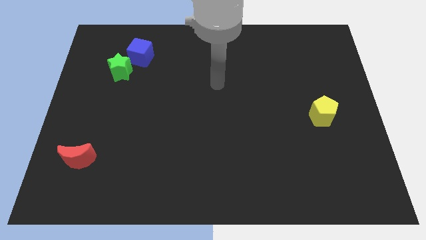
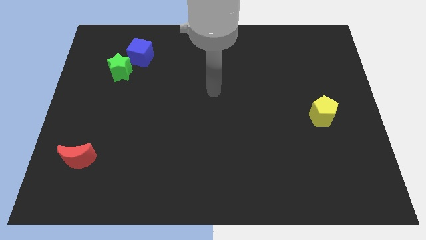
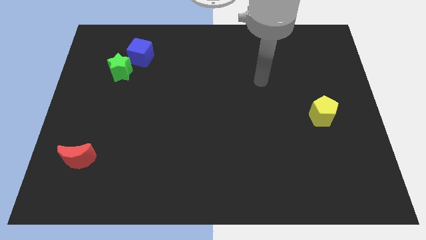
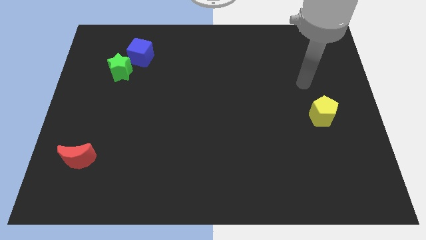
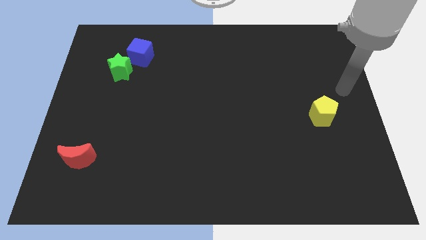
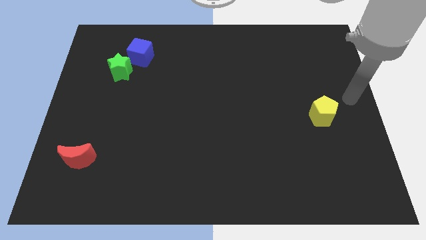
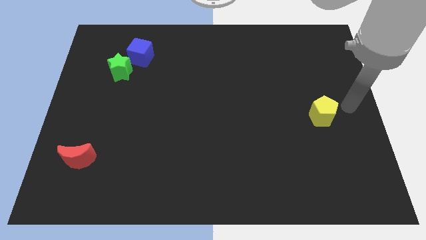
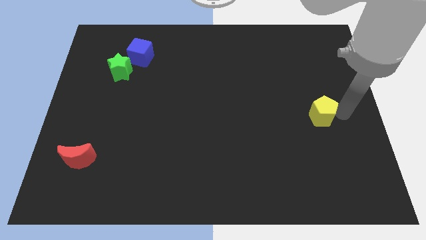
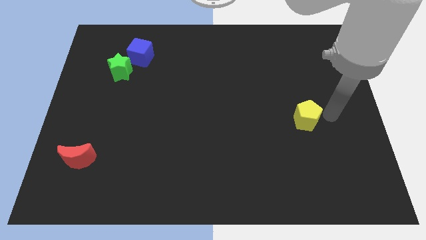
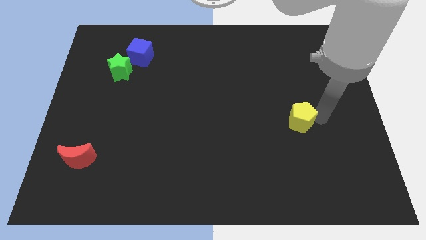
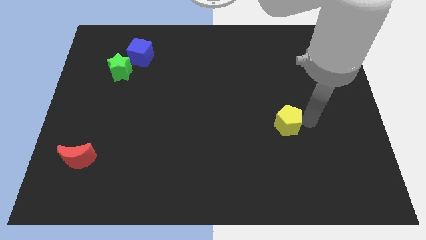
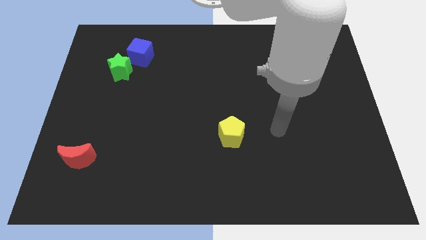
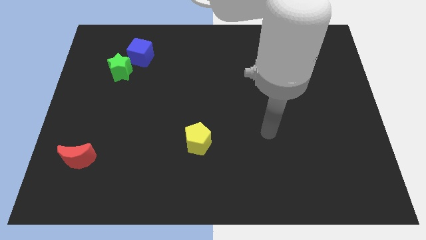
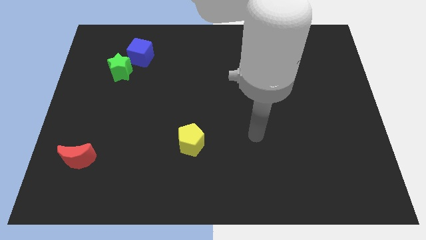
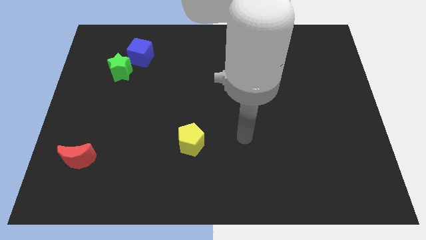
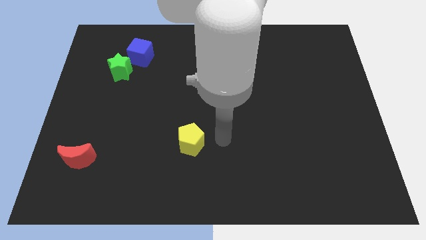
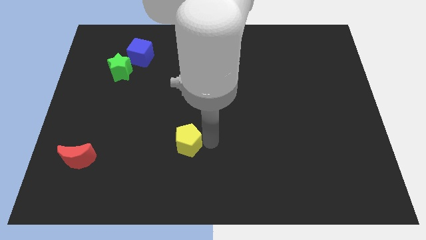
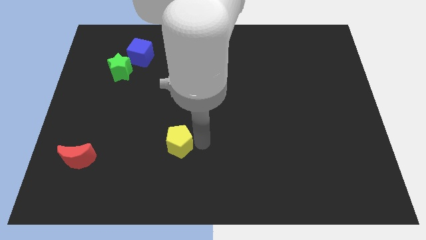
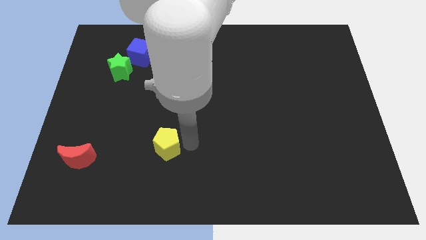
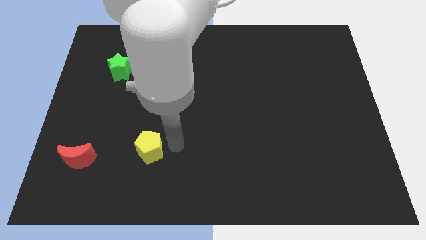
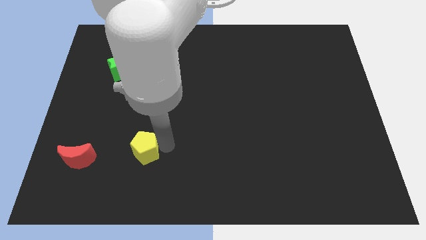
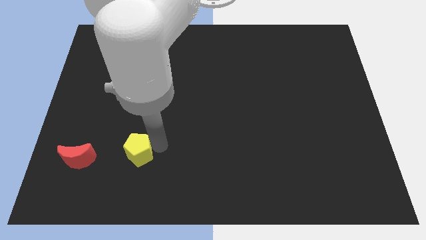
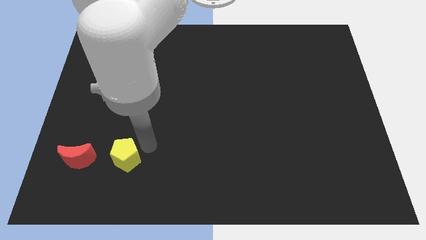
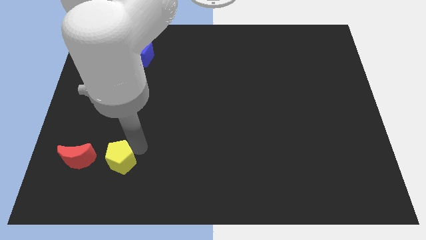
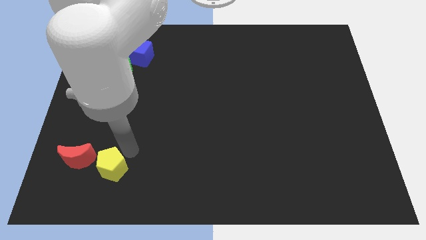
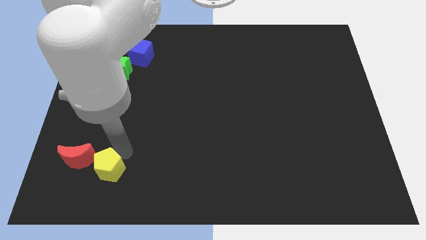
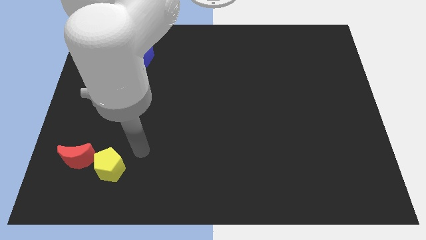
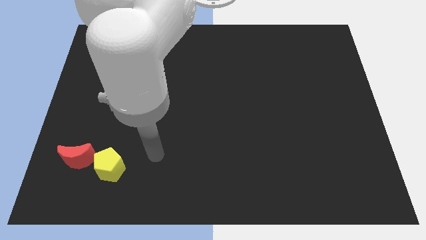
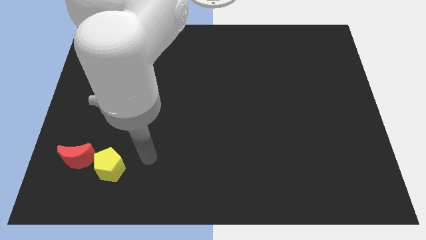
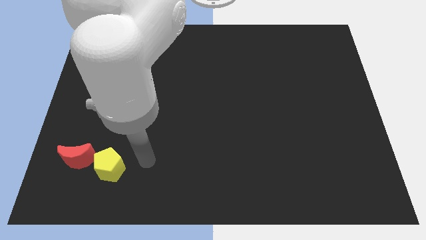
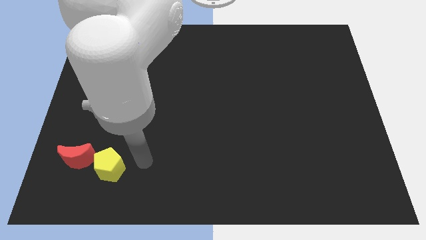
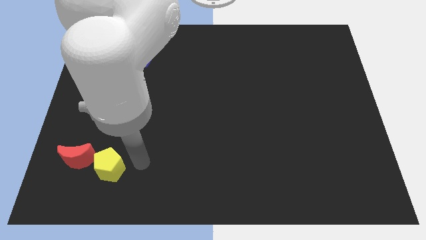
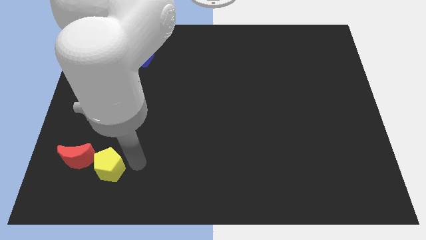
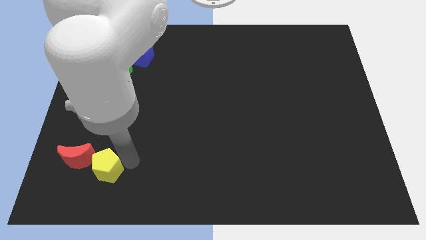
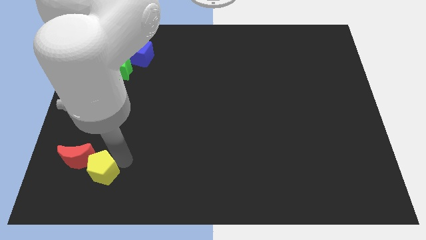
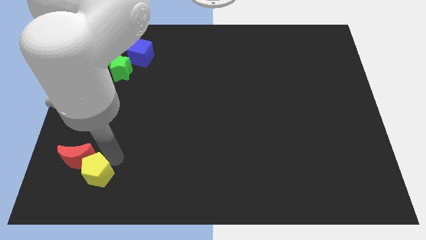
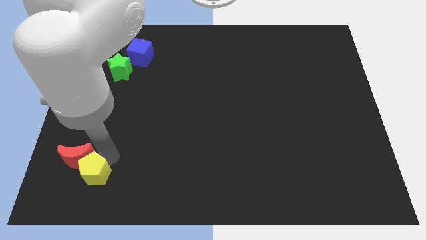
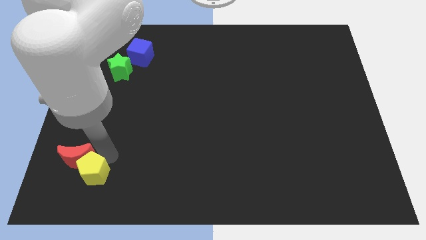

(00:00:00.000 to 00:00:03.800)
slide the yellow block close to the red block

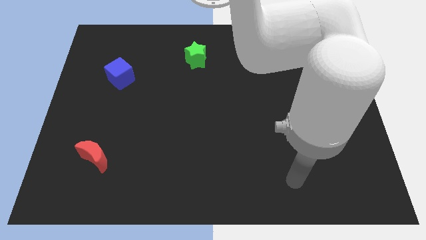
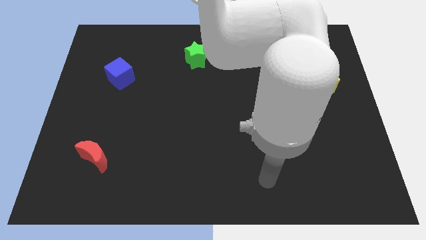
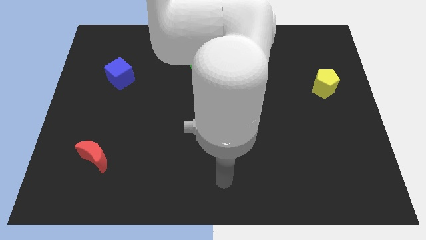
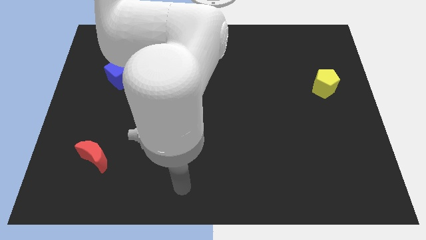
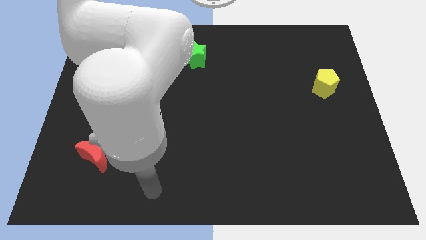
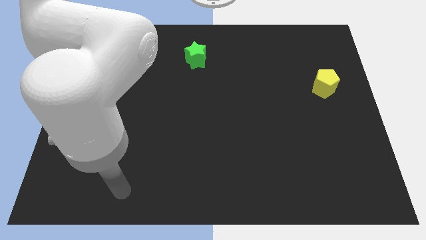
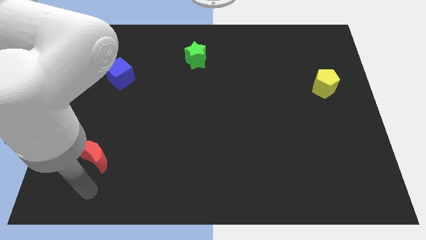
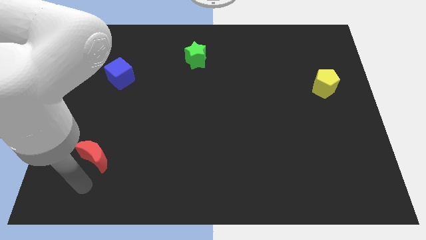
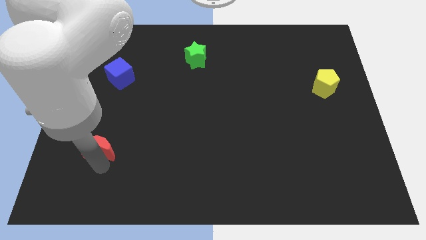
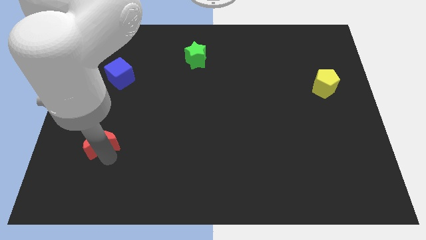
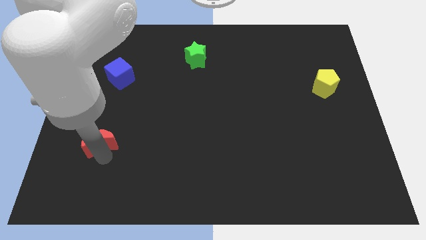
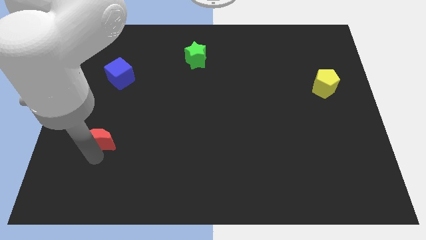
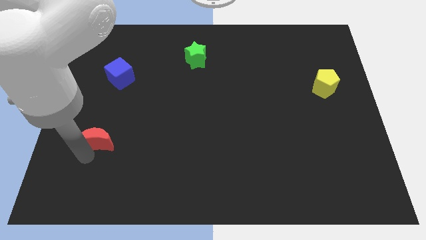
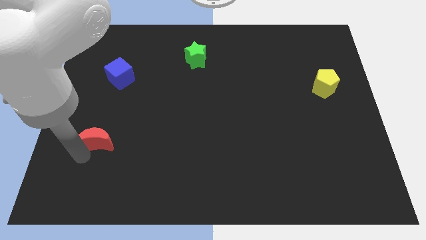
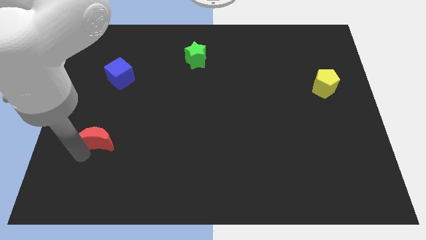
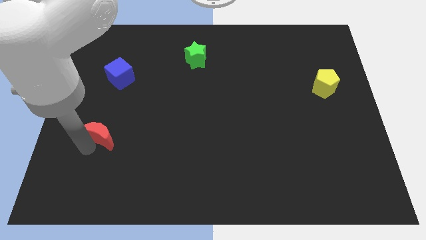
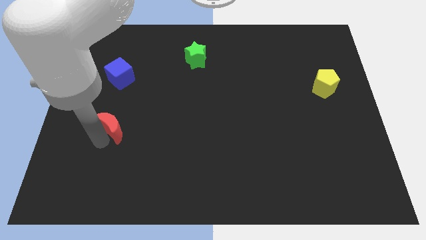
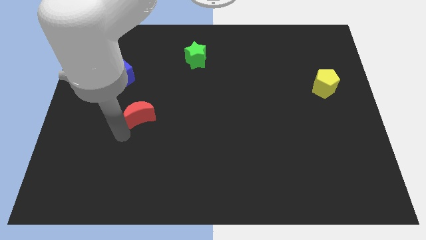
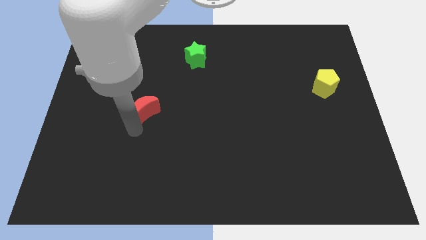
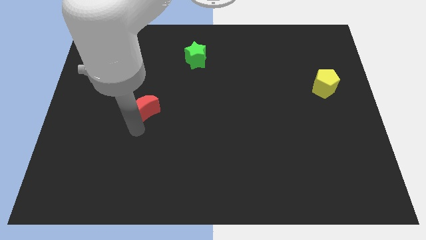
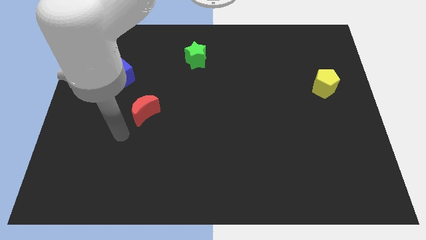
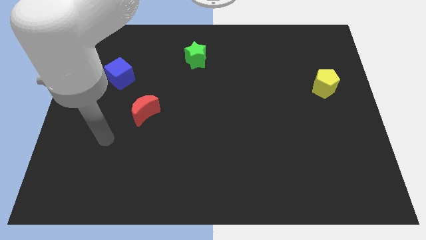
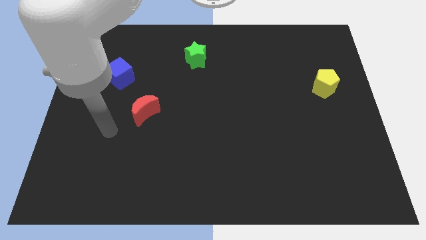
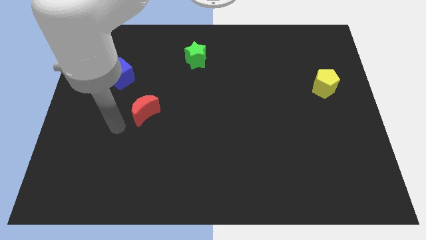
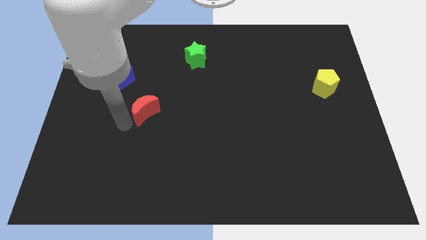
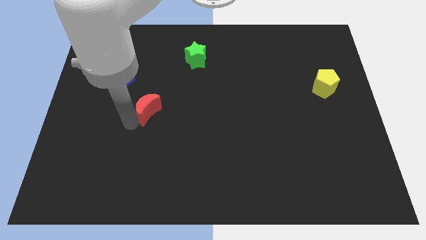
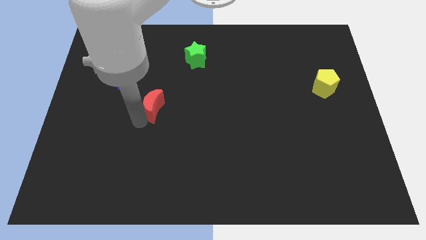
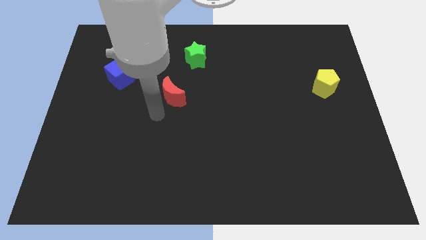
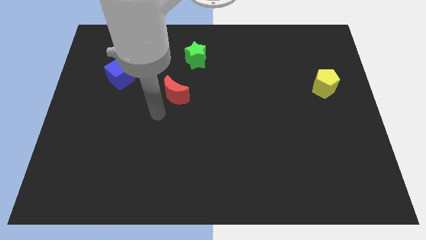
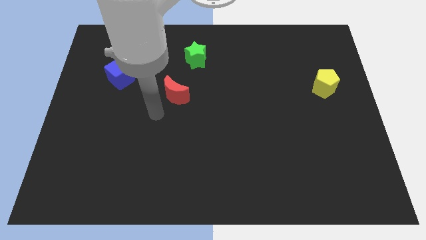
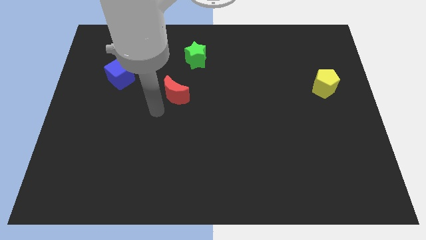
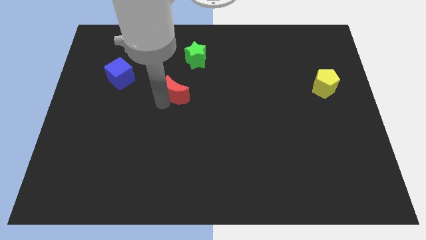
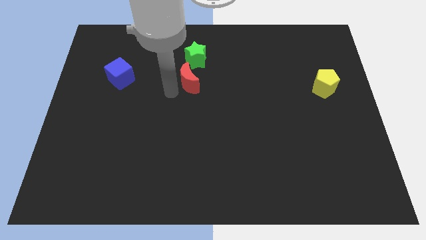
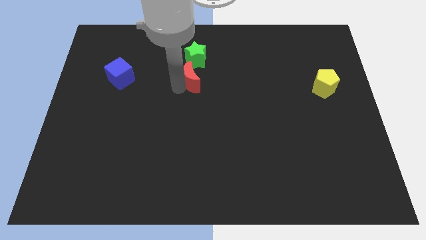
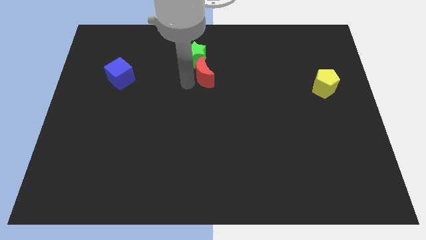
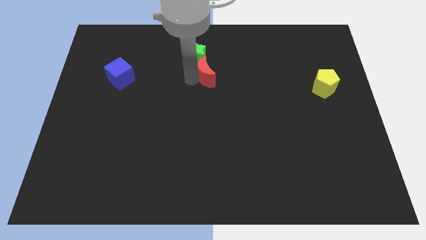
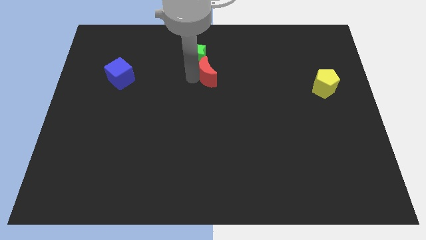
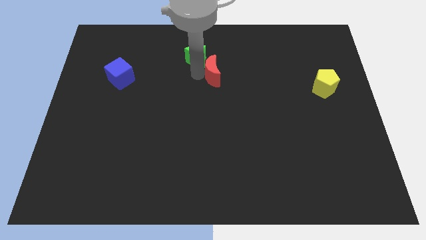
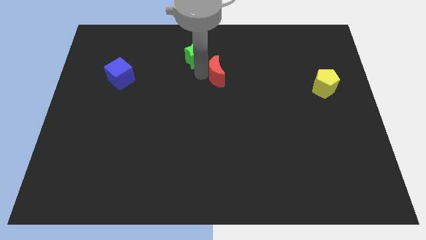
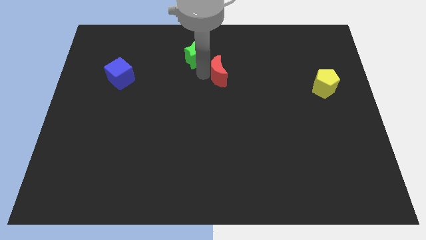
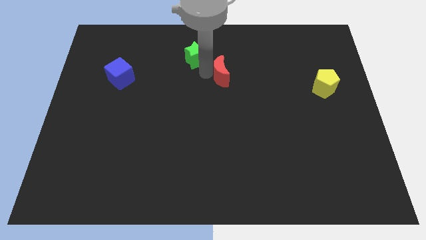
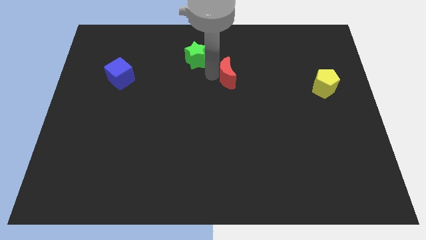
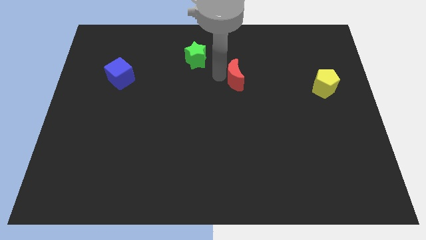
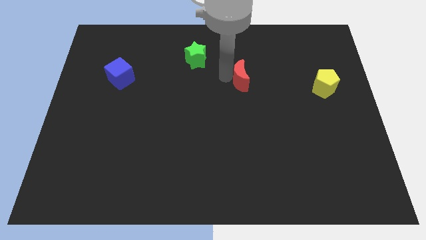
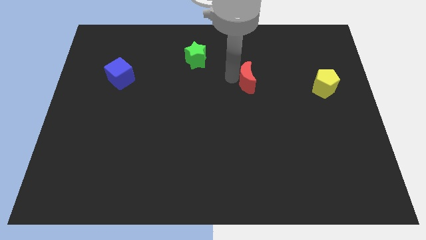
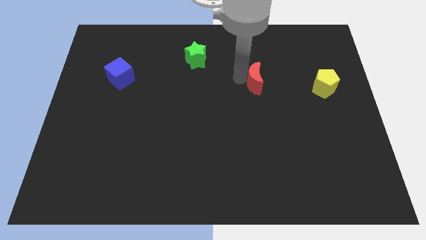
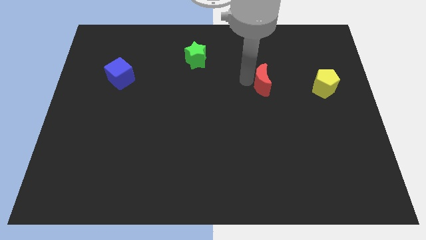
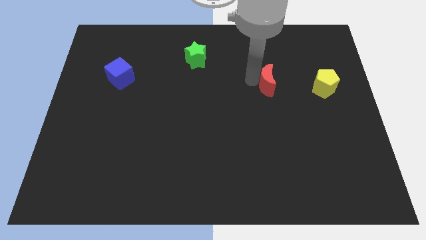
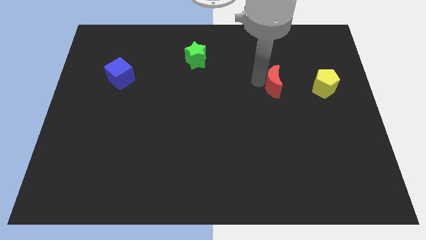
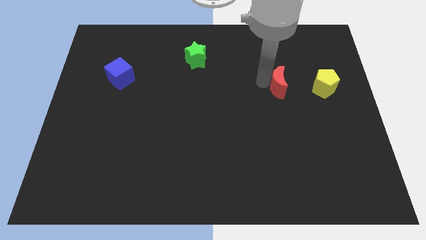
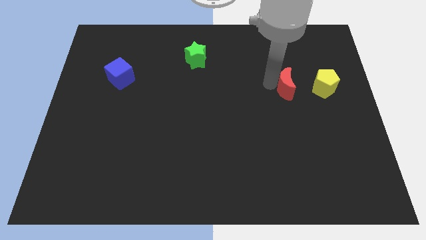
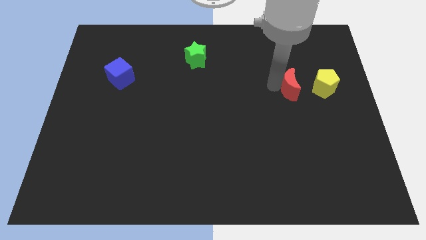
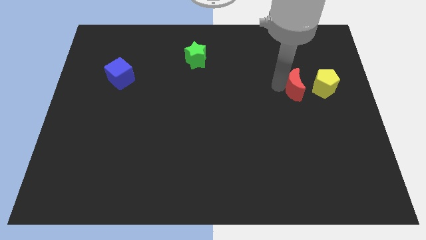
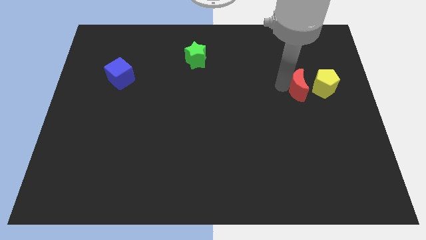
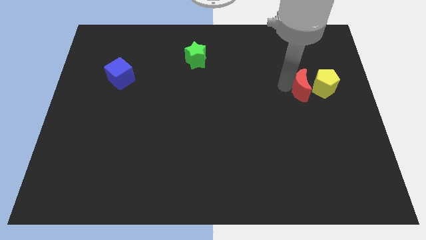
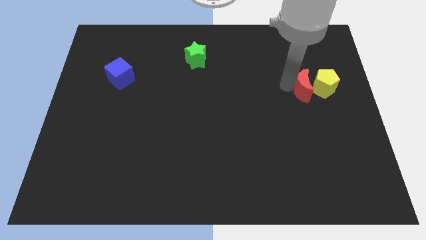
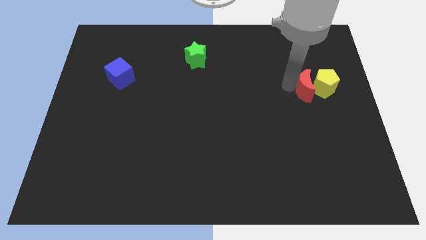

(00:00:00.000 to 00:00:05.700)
slide the red block next to the yellow pentagon
